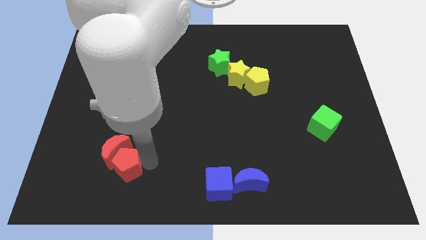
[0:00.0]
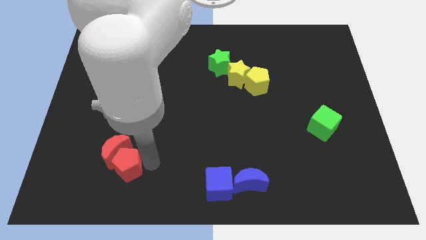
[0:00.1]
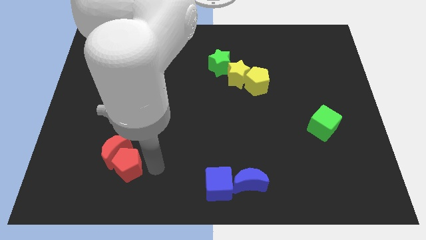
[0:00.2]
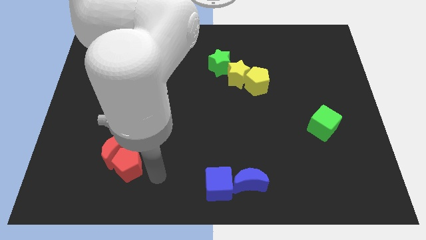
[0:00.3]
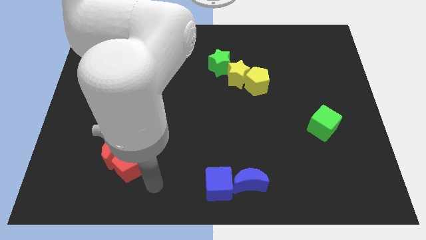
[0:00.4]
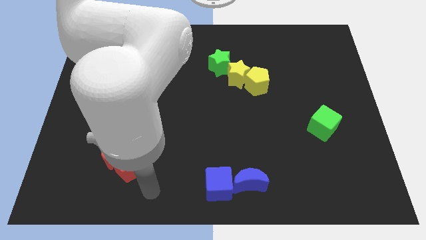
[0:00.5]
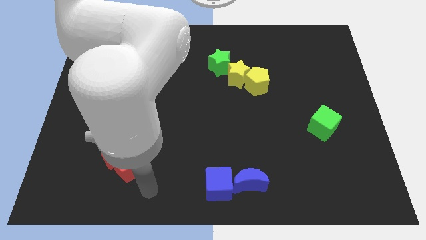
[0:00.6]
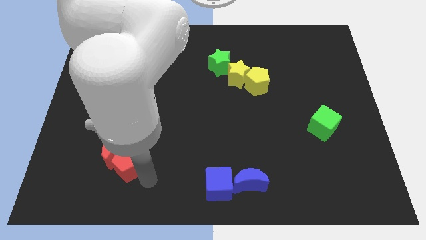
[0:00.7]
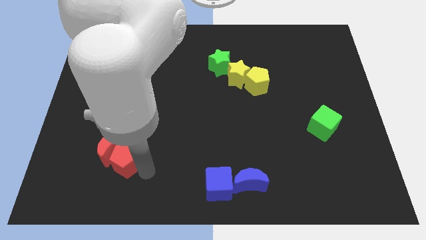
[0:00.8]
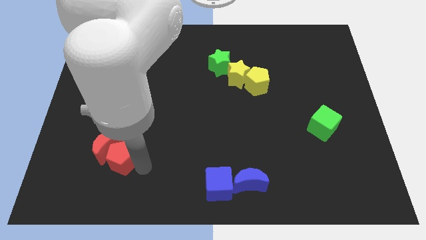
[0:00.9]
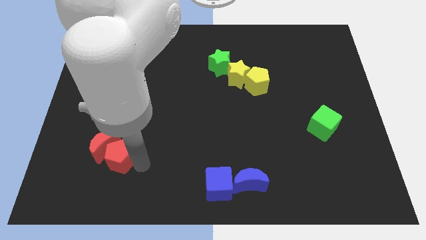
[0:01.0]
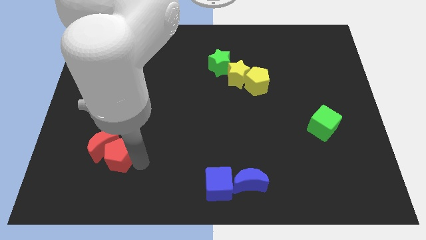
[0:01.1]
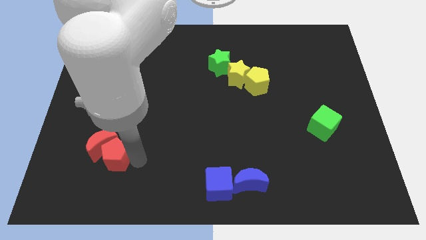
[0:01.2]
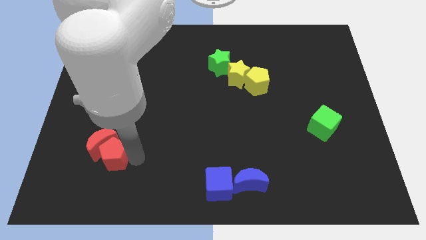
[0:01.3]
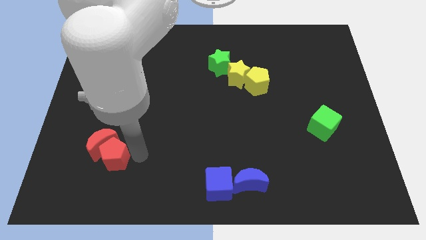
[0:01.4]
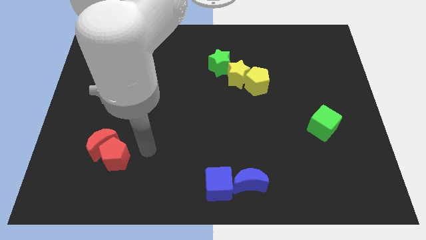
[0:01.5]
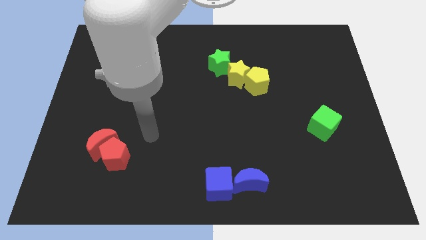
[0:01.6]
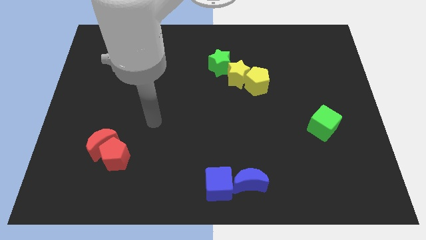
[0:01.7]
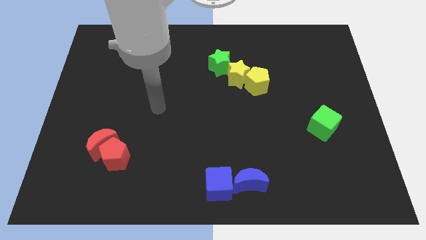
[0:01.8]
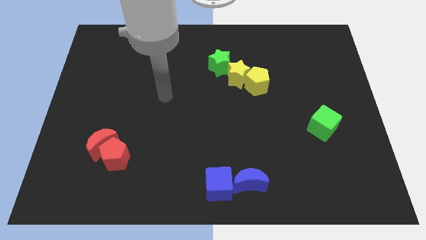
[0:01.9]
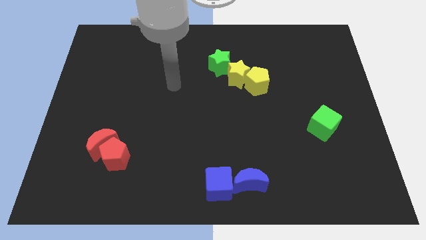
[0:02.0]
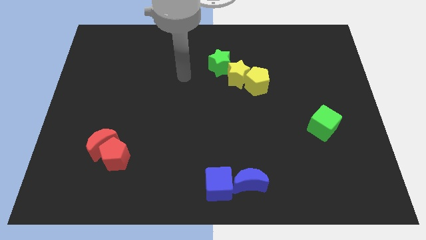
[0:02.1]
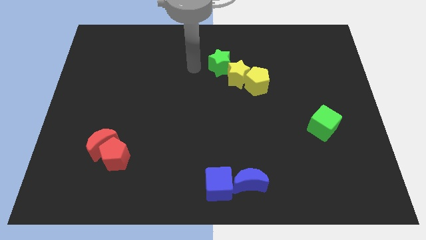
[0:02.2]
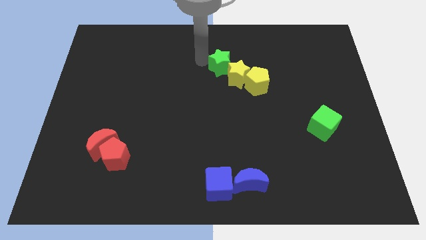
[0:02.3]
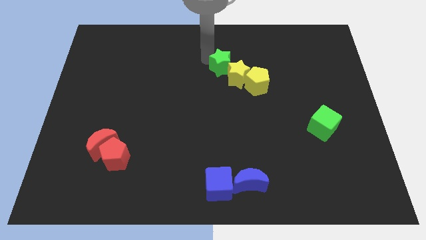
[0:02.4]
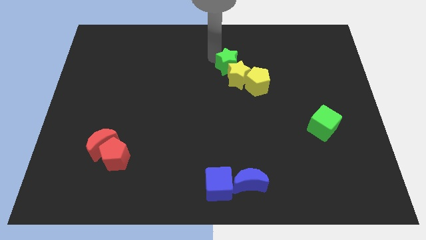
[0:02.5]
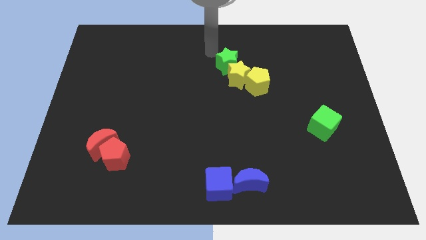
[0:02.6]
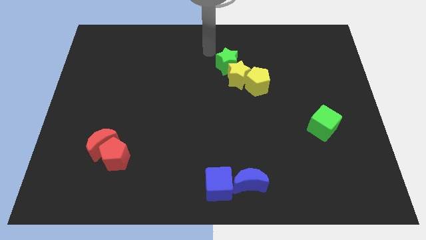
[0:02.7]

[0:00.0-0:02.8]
move your arm close to the green star

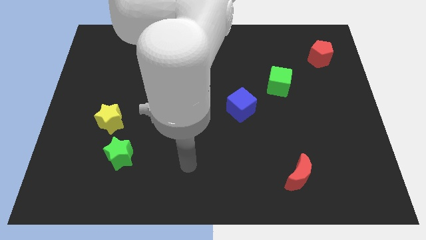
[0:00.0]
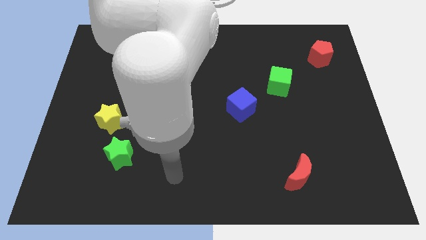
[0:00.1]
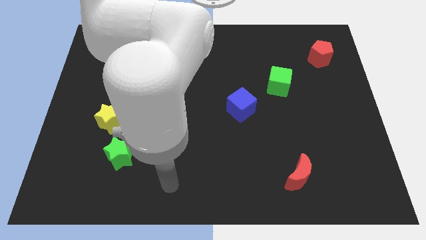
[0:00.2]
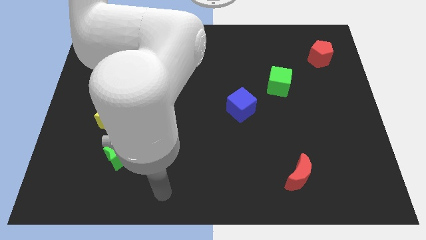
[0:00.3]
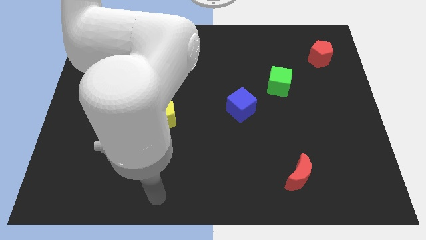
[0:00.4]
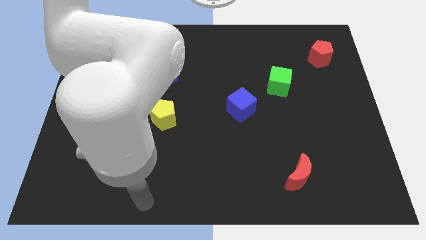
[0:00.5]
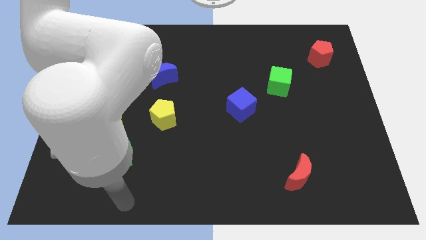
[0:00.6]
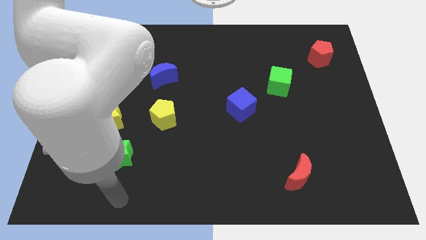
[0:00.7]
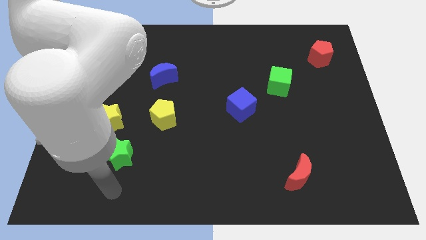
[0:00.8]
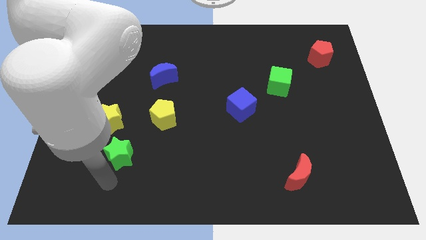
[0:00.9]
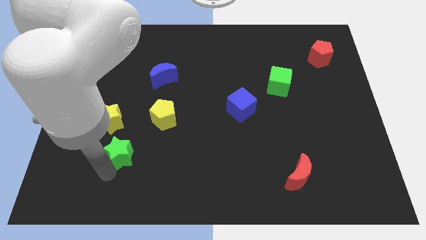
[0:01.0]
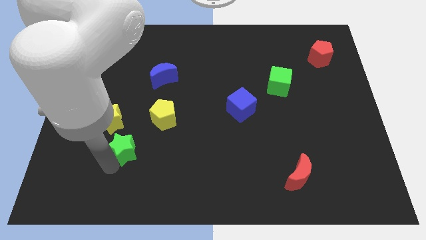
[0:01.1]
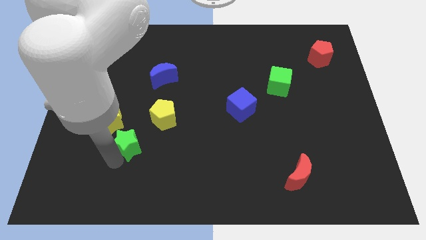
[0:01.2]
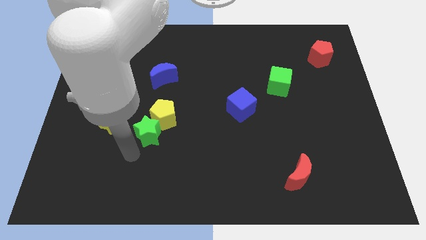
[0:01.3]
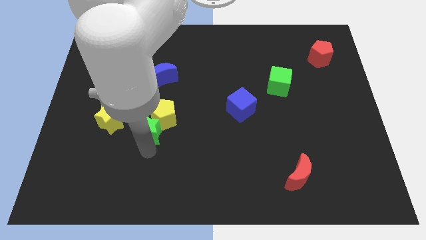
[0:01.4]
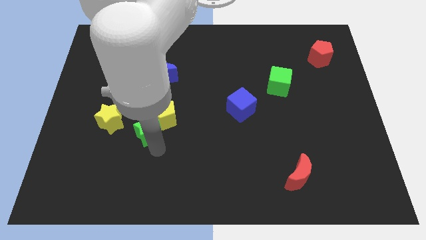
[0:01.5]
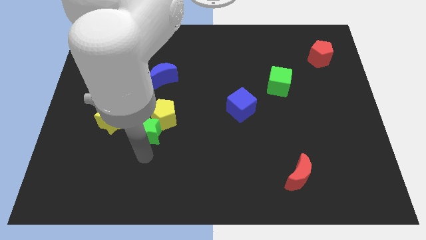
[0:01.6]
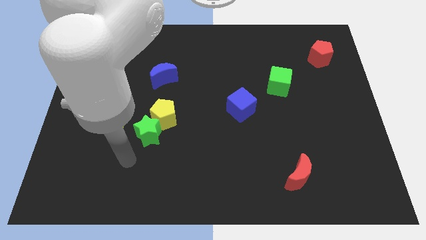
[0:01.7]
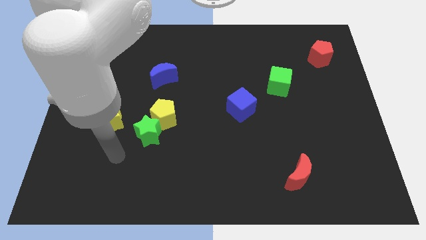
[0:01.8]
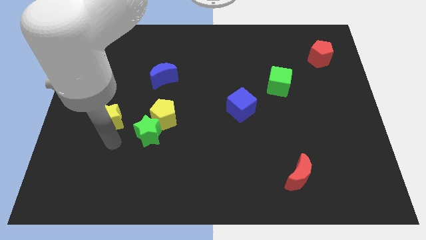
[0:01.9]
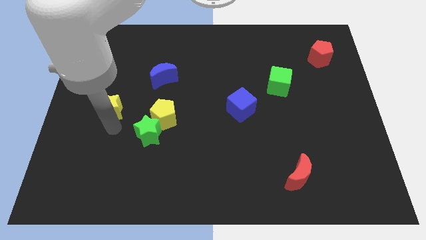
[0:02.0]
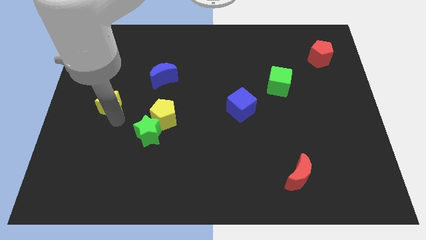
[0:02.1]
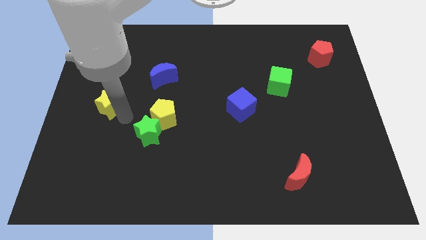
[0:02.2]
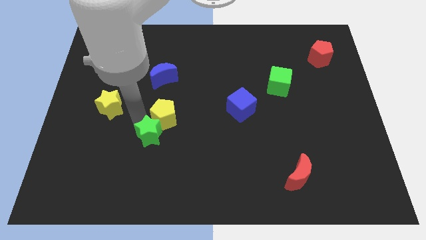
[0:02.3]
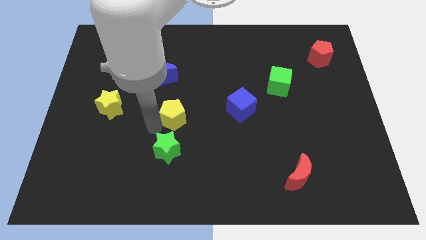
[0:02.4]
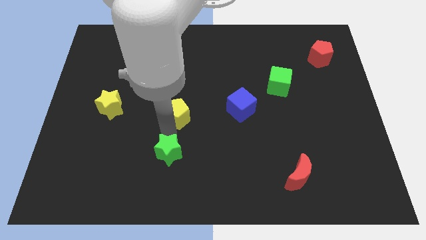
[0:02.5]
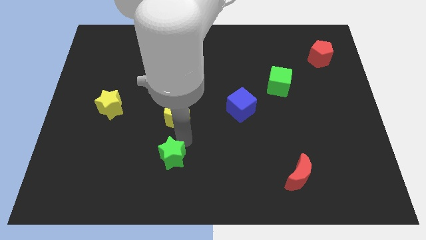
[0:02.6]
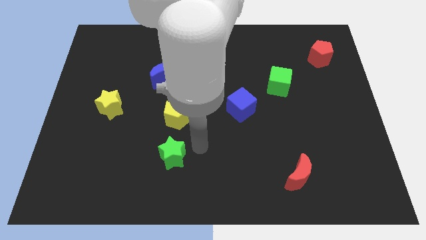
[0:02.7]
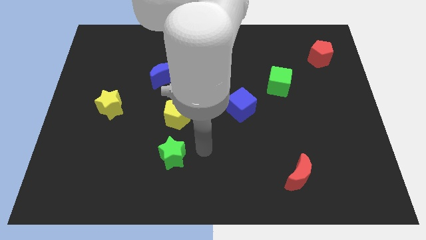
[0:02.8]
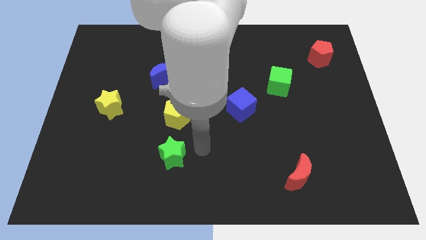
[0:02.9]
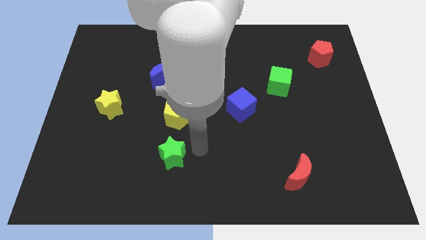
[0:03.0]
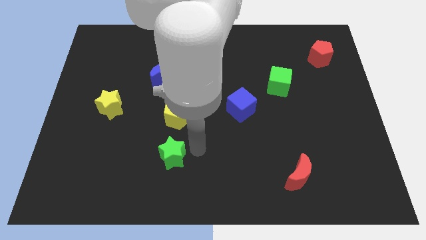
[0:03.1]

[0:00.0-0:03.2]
push the green star into the yellow pentagon

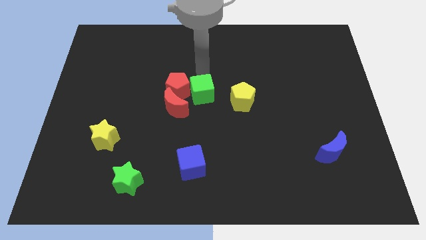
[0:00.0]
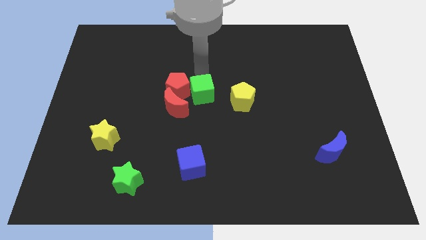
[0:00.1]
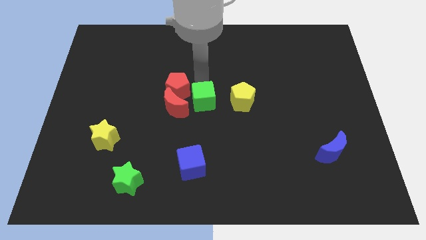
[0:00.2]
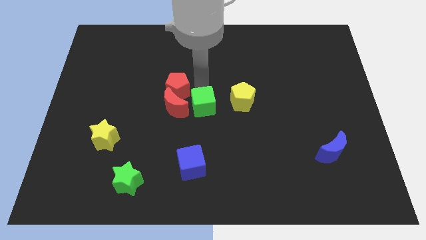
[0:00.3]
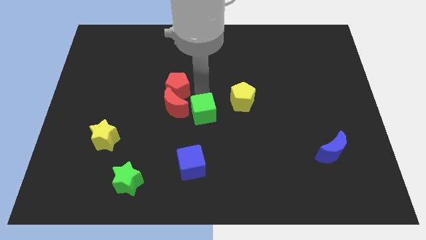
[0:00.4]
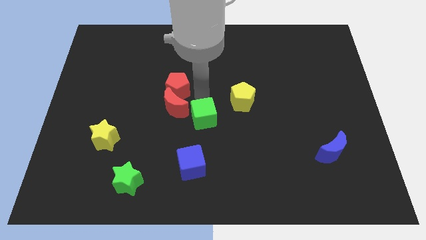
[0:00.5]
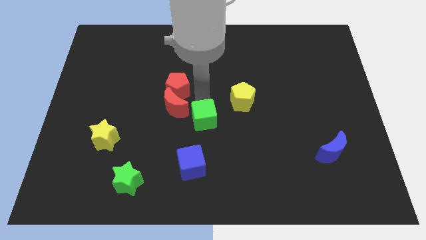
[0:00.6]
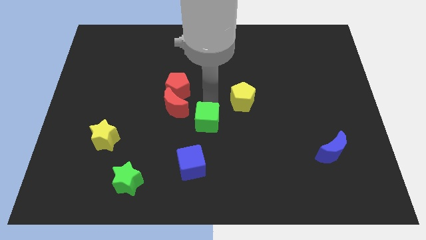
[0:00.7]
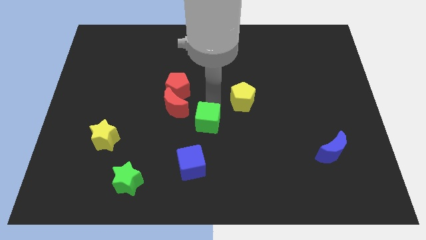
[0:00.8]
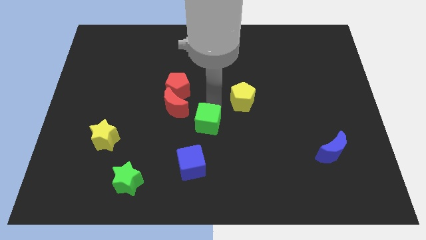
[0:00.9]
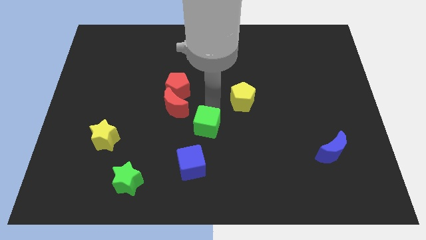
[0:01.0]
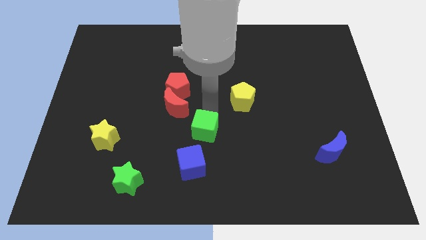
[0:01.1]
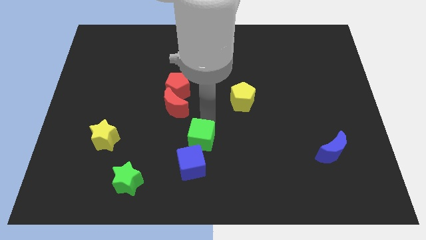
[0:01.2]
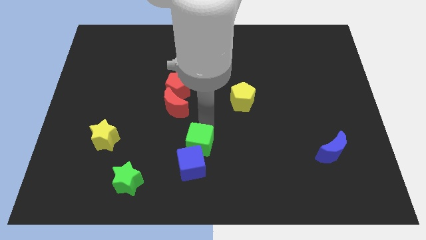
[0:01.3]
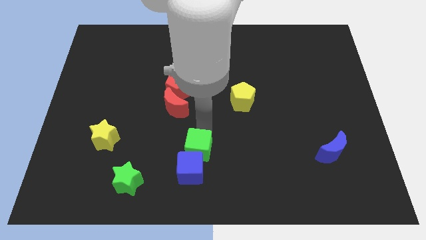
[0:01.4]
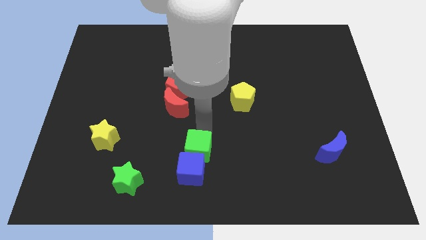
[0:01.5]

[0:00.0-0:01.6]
push the green cube into blue cube

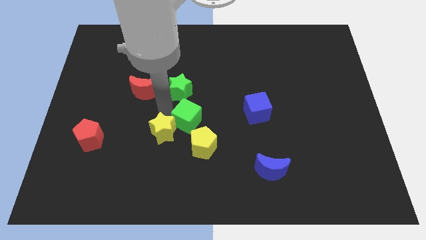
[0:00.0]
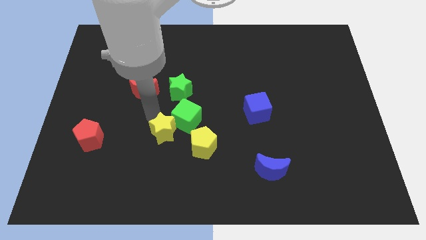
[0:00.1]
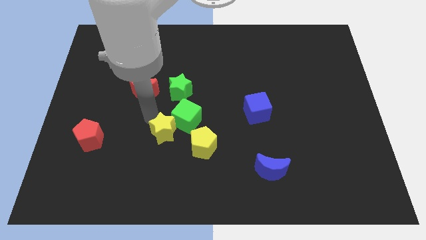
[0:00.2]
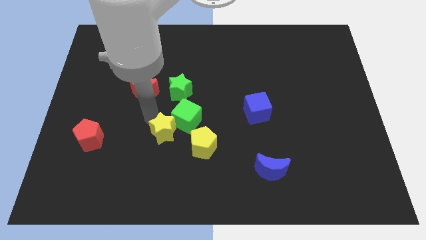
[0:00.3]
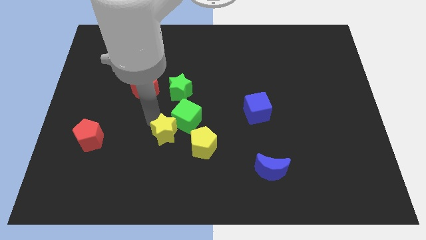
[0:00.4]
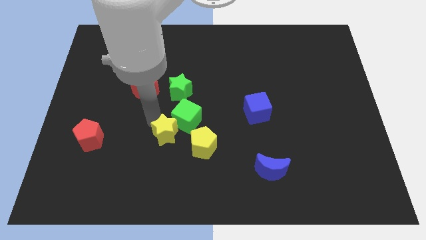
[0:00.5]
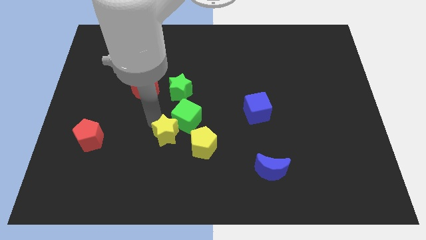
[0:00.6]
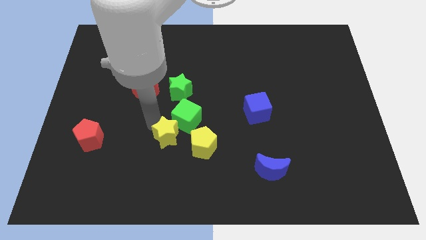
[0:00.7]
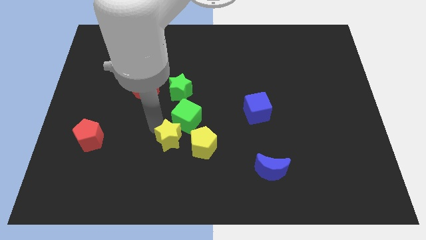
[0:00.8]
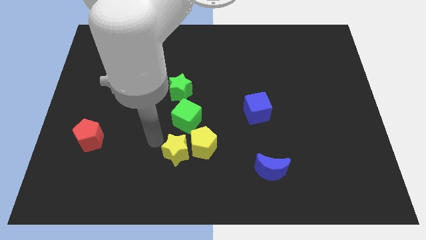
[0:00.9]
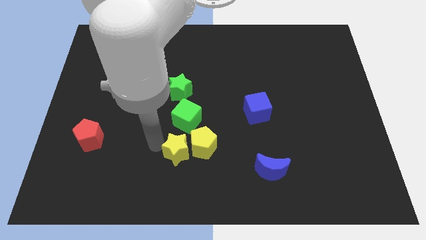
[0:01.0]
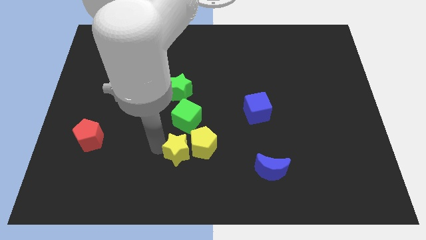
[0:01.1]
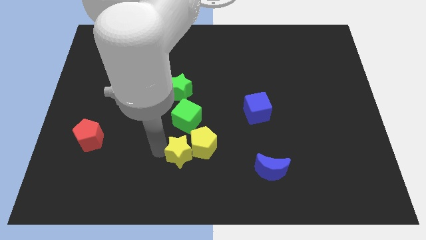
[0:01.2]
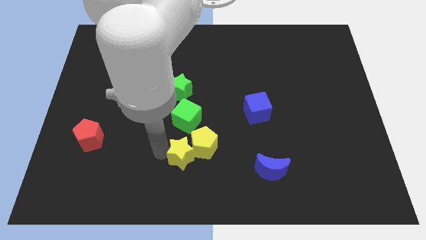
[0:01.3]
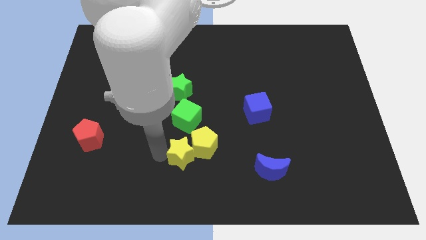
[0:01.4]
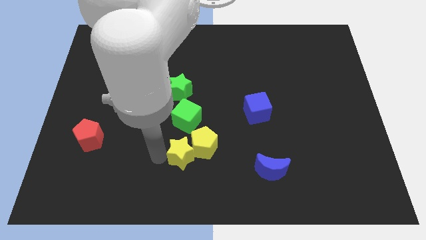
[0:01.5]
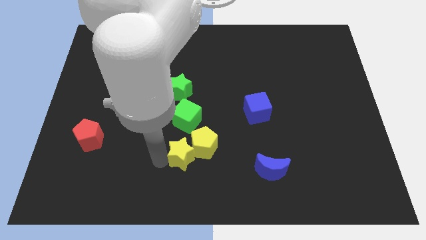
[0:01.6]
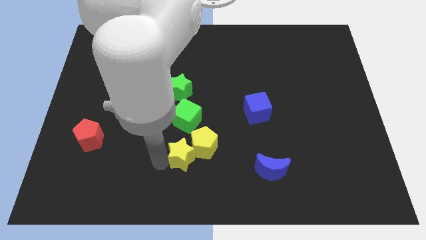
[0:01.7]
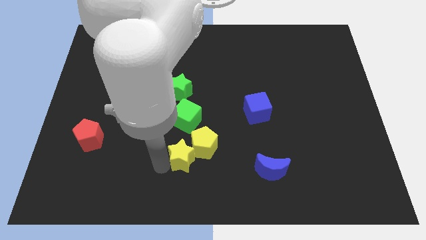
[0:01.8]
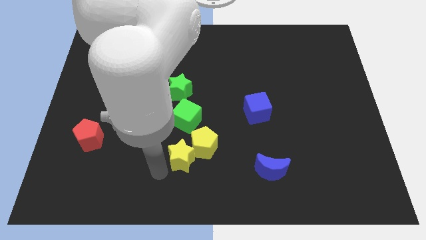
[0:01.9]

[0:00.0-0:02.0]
slide the yellow star to the bottom left side of the yellow pentagon
